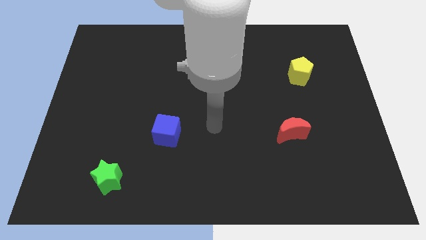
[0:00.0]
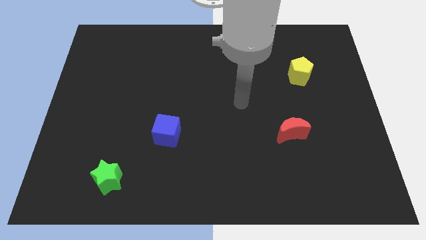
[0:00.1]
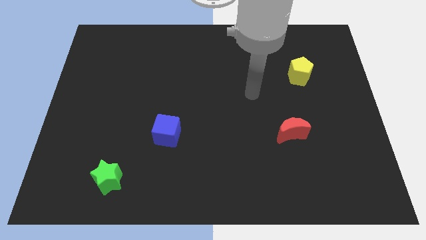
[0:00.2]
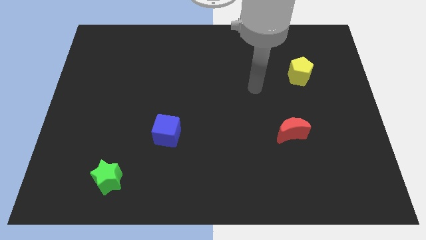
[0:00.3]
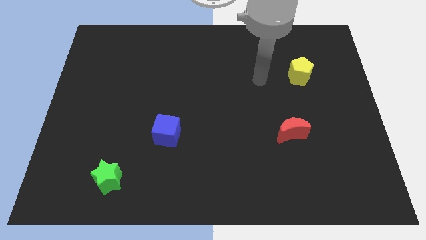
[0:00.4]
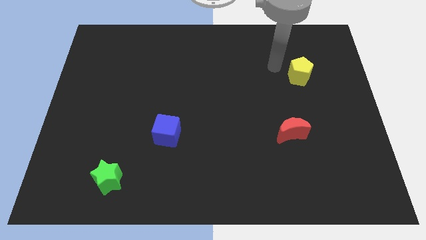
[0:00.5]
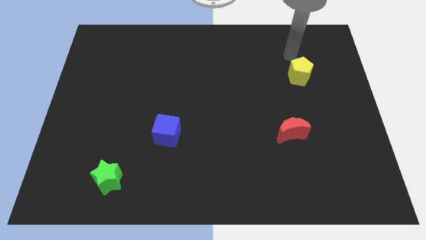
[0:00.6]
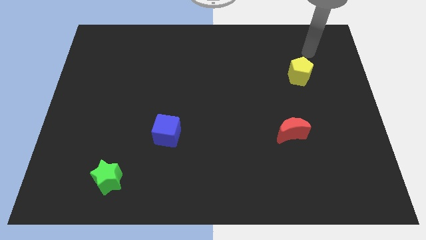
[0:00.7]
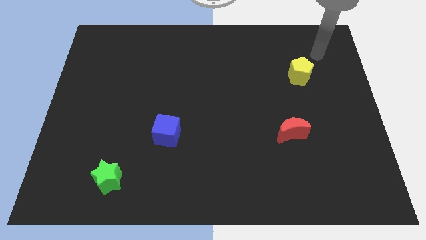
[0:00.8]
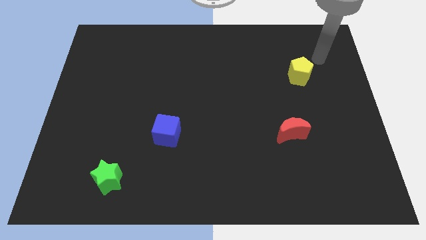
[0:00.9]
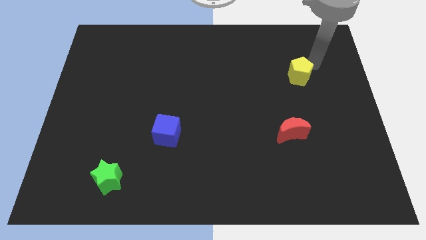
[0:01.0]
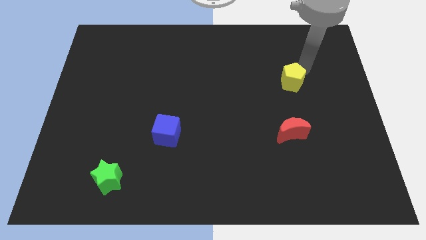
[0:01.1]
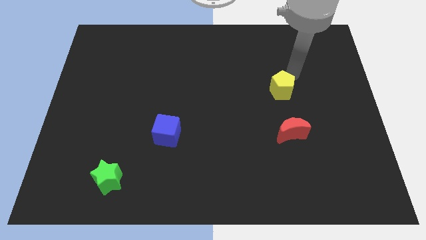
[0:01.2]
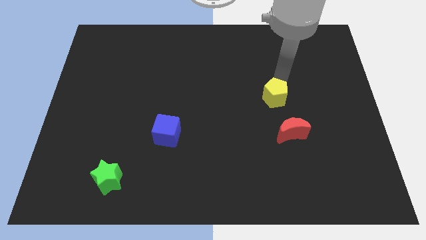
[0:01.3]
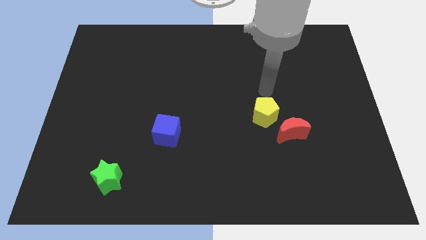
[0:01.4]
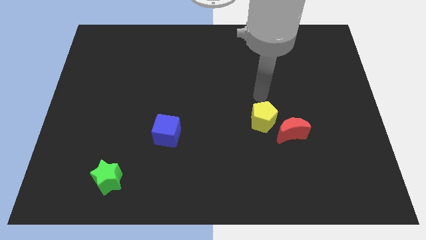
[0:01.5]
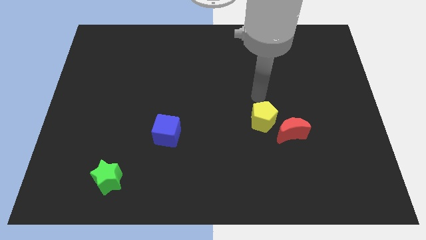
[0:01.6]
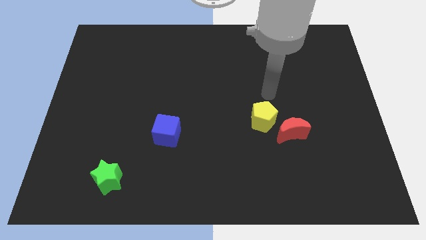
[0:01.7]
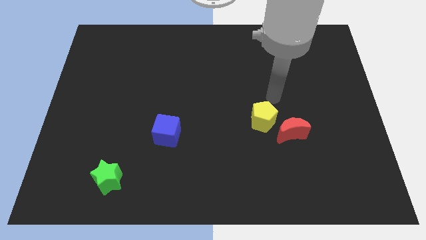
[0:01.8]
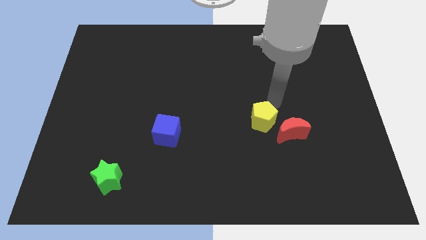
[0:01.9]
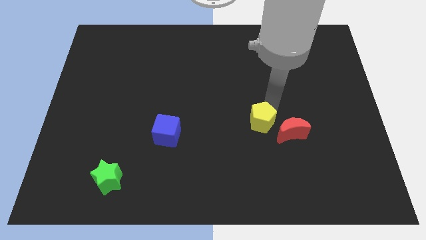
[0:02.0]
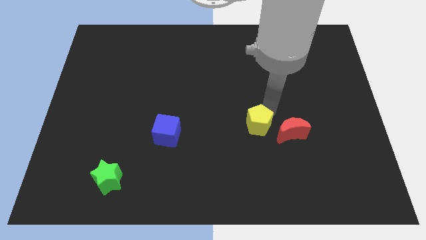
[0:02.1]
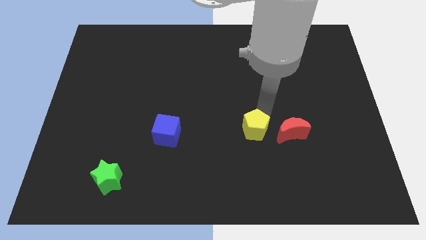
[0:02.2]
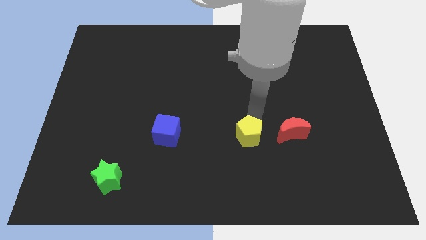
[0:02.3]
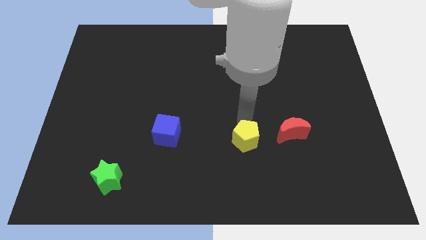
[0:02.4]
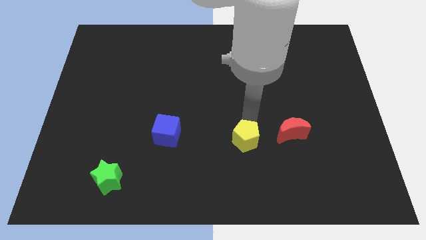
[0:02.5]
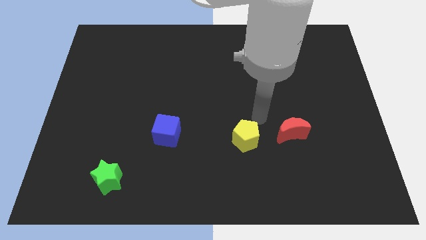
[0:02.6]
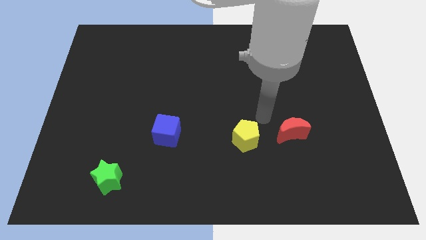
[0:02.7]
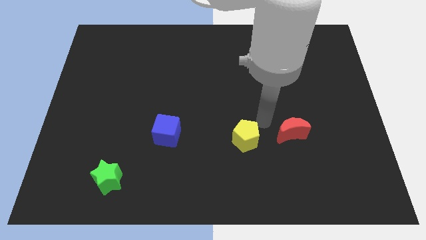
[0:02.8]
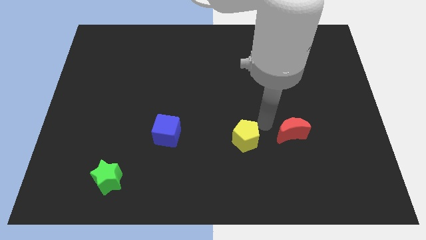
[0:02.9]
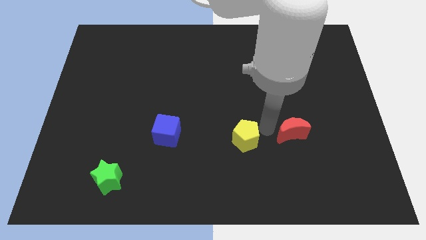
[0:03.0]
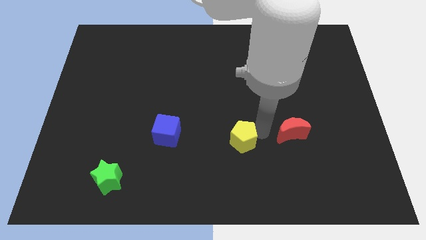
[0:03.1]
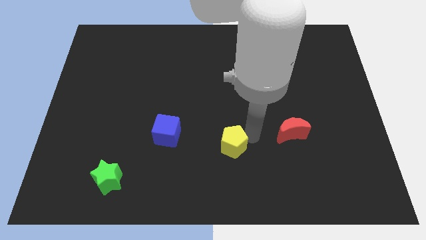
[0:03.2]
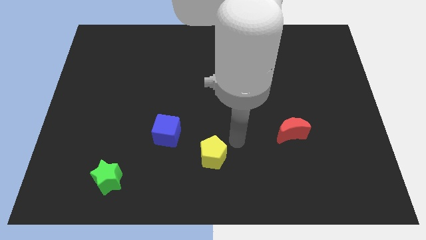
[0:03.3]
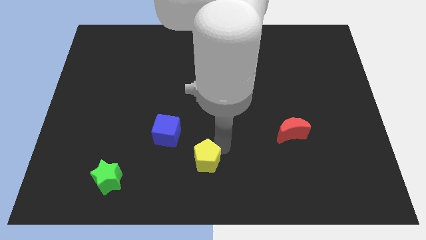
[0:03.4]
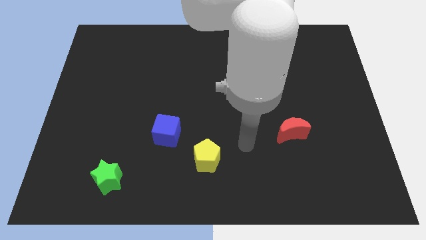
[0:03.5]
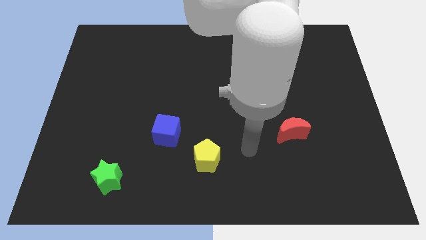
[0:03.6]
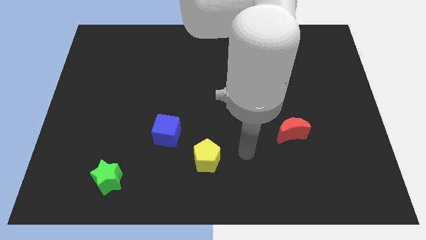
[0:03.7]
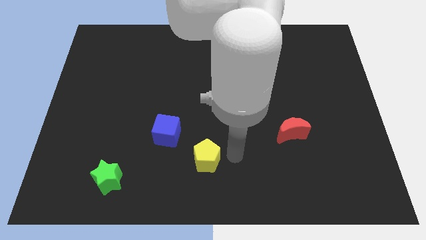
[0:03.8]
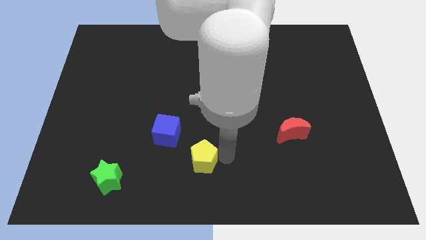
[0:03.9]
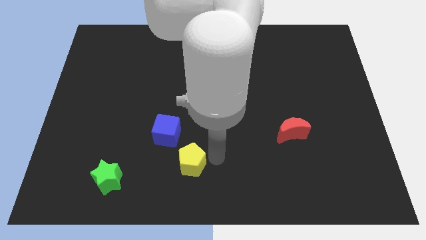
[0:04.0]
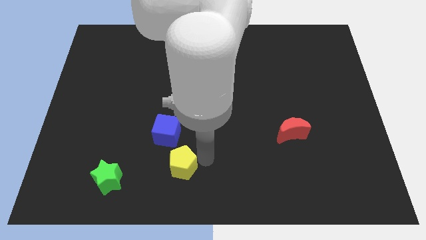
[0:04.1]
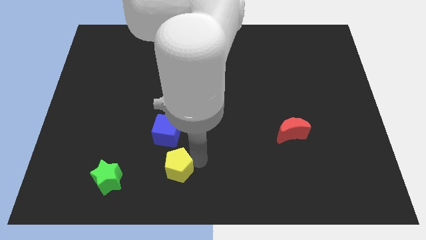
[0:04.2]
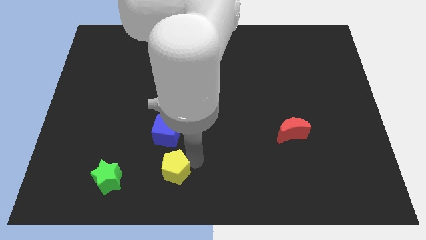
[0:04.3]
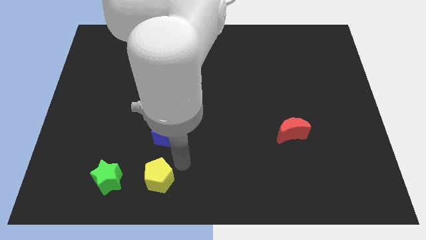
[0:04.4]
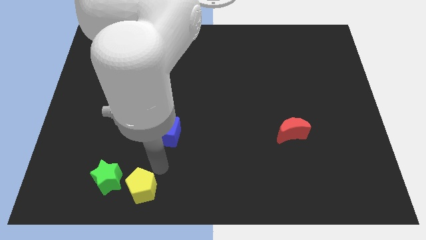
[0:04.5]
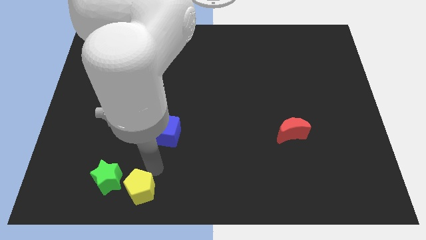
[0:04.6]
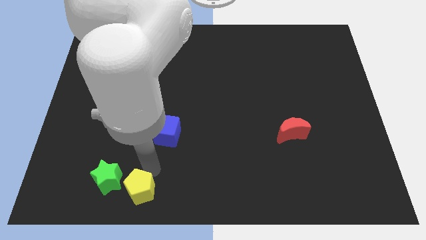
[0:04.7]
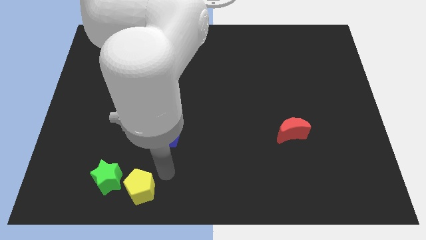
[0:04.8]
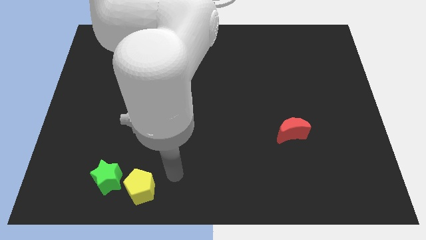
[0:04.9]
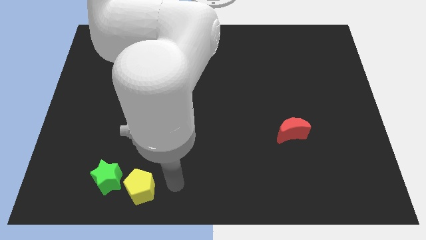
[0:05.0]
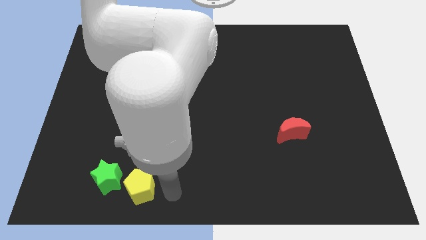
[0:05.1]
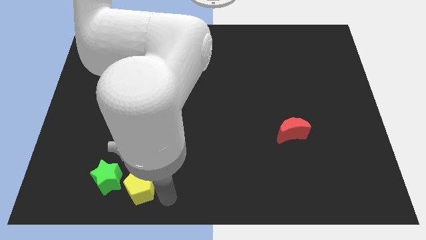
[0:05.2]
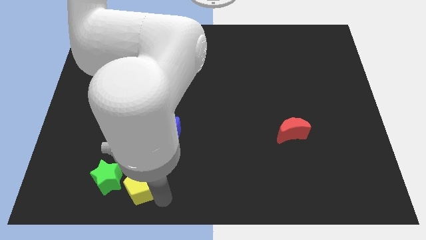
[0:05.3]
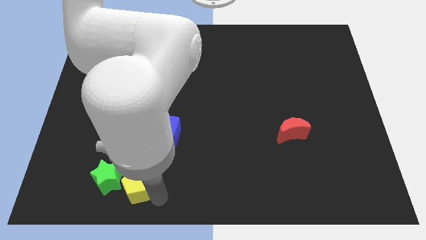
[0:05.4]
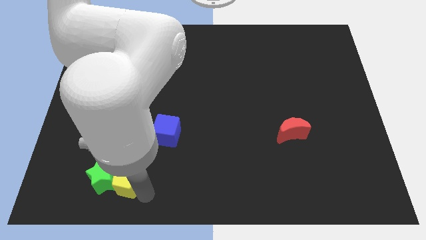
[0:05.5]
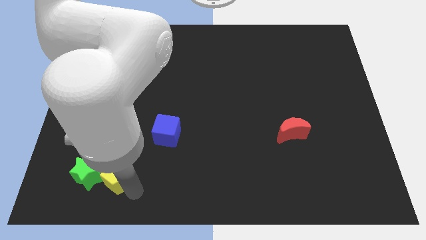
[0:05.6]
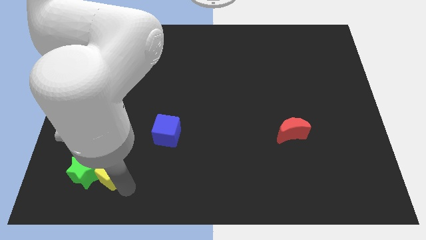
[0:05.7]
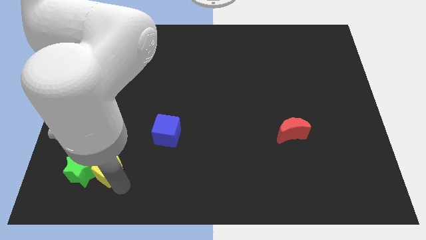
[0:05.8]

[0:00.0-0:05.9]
push the yellow block next to the green block

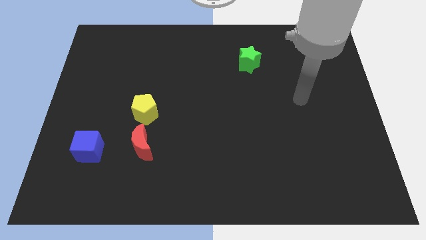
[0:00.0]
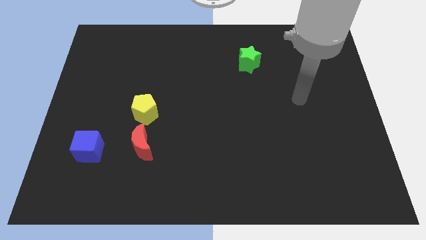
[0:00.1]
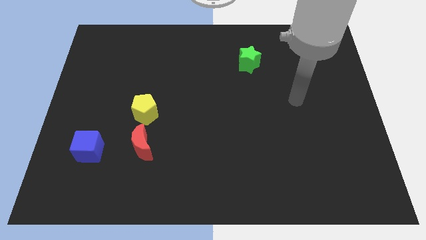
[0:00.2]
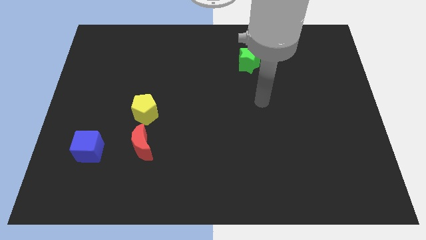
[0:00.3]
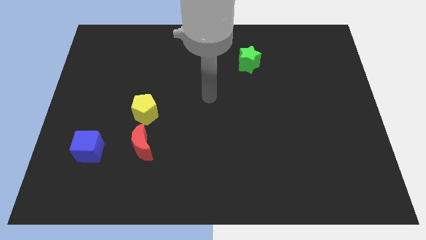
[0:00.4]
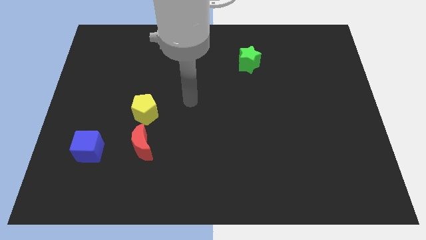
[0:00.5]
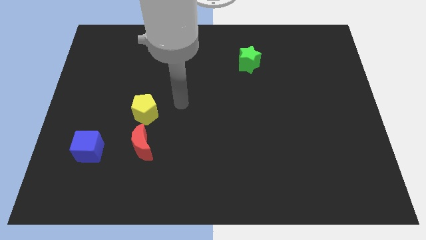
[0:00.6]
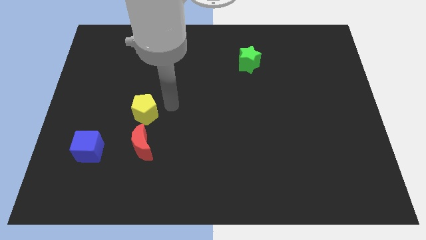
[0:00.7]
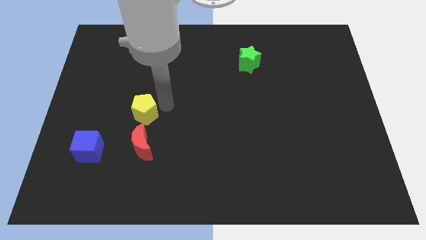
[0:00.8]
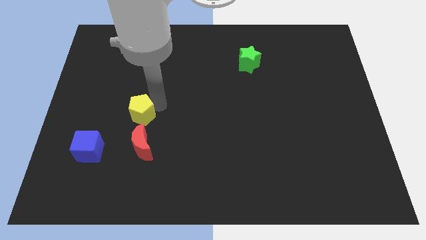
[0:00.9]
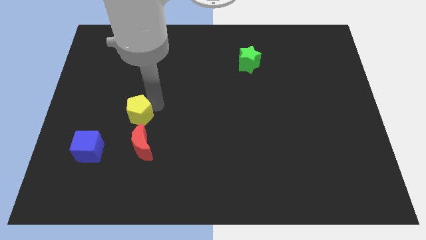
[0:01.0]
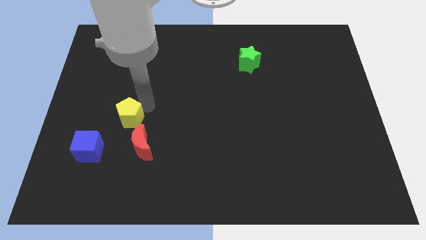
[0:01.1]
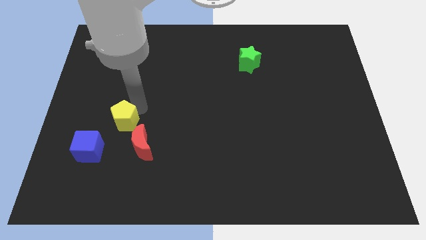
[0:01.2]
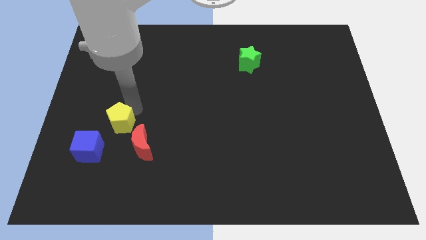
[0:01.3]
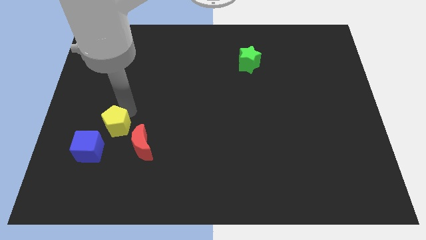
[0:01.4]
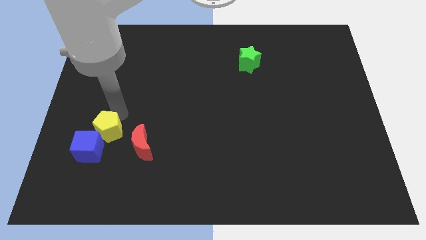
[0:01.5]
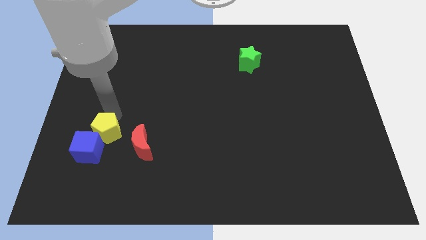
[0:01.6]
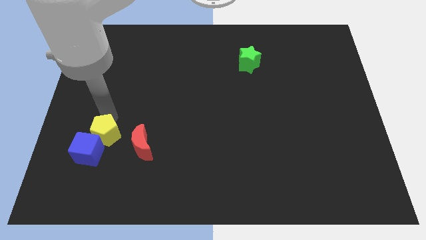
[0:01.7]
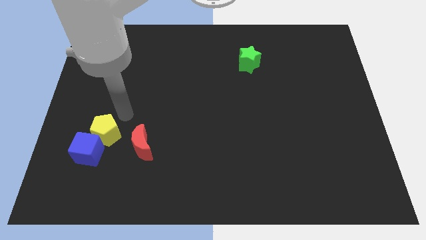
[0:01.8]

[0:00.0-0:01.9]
put the yellow pentagon close to the cube

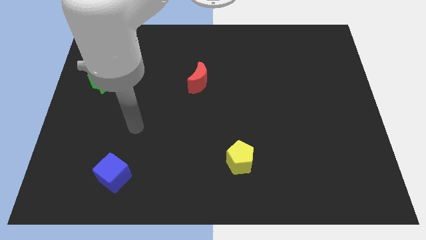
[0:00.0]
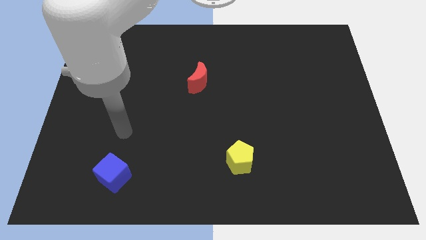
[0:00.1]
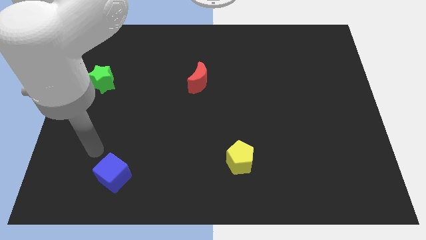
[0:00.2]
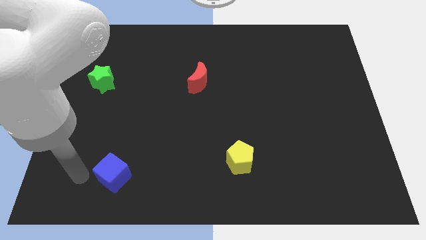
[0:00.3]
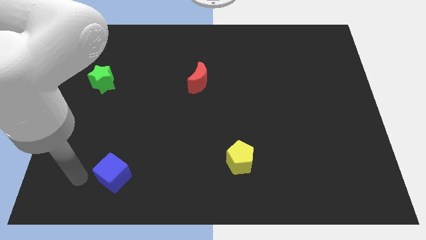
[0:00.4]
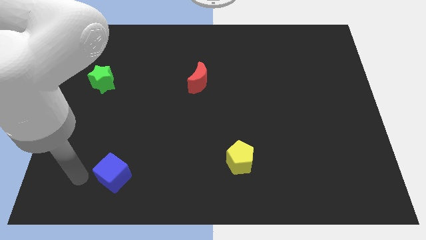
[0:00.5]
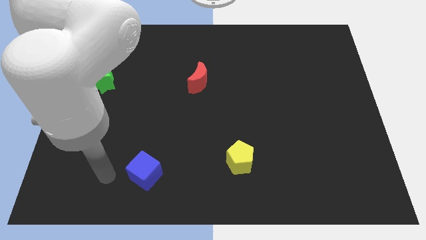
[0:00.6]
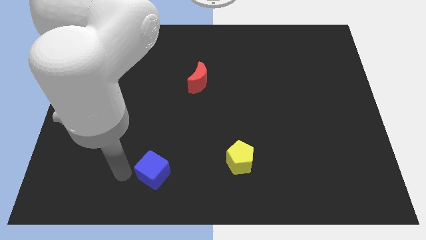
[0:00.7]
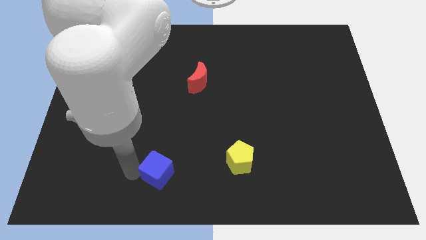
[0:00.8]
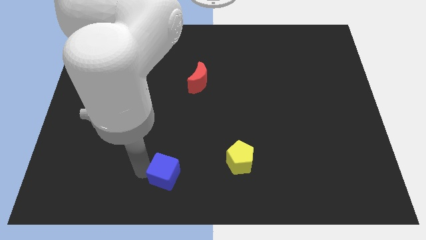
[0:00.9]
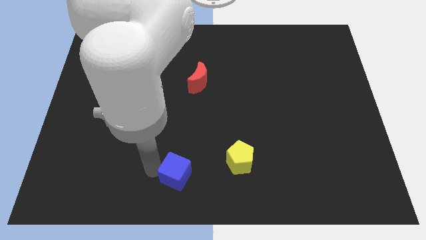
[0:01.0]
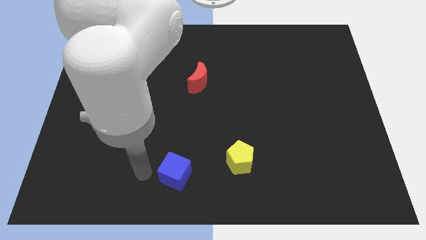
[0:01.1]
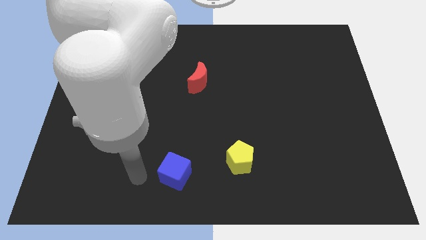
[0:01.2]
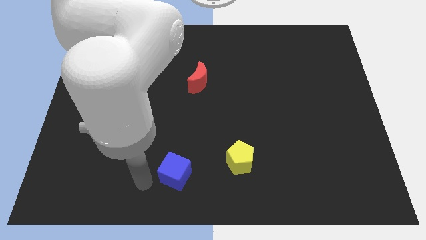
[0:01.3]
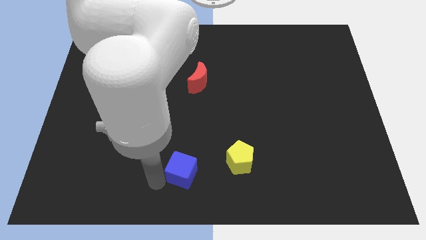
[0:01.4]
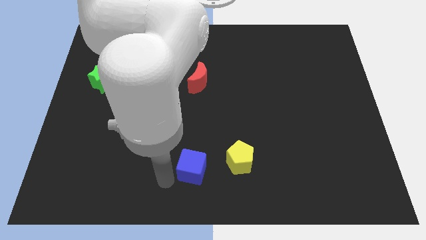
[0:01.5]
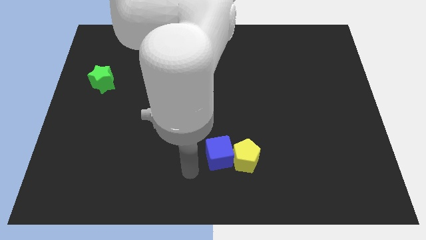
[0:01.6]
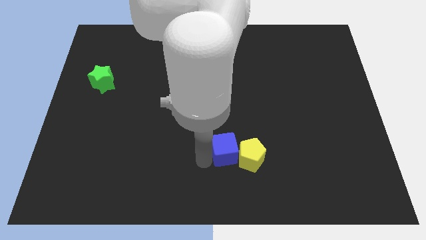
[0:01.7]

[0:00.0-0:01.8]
move the blue block to the yellow pentagon
